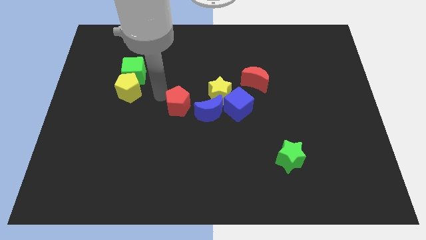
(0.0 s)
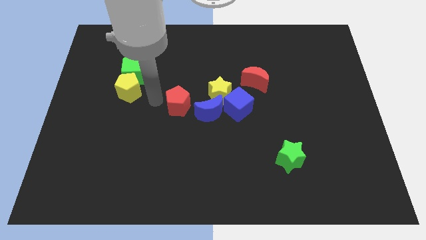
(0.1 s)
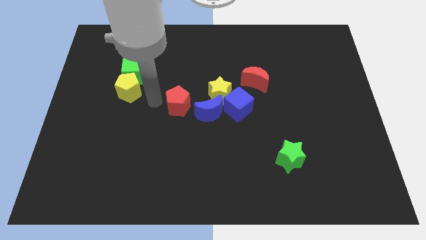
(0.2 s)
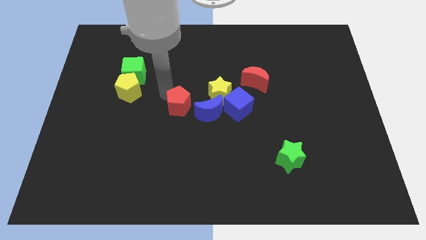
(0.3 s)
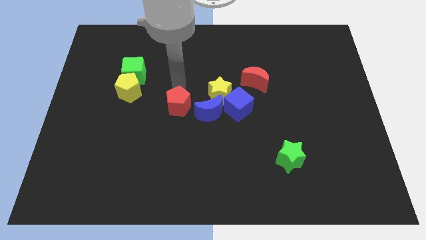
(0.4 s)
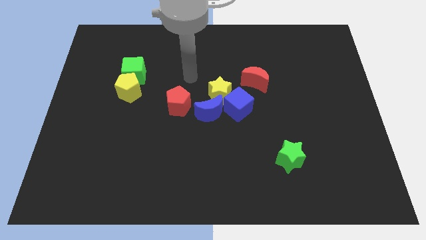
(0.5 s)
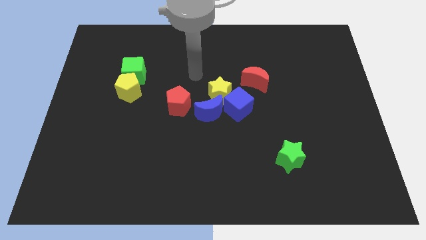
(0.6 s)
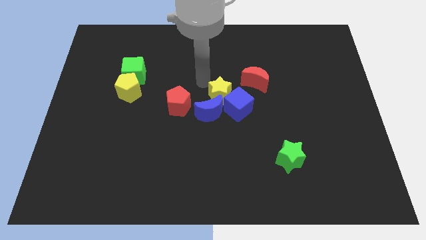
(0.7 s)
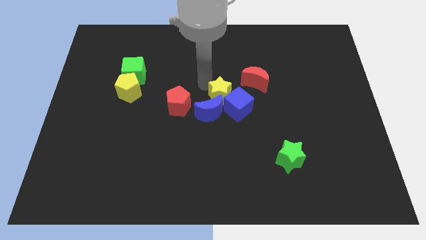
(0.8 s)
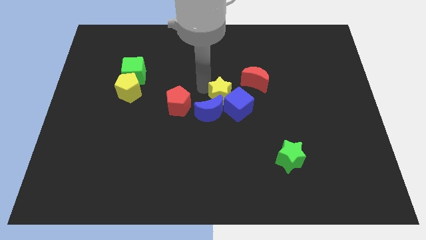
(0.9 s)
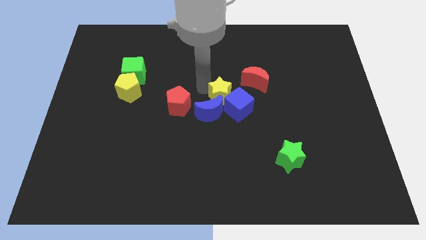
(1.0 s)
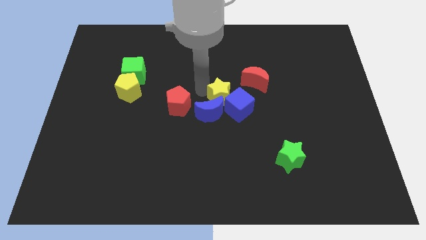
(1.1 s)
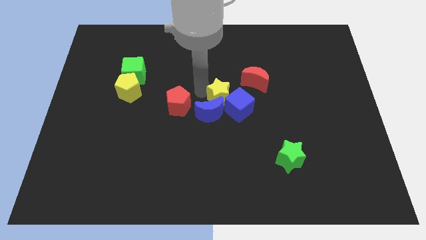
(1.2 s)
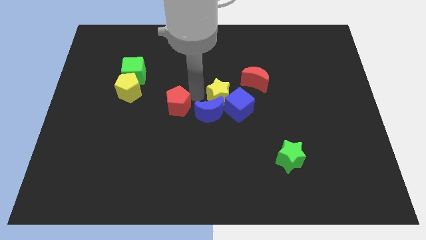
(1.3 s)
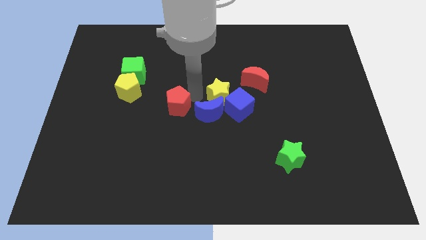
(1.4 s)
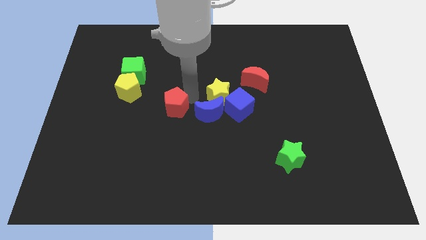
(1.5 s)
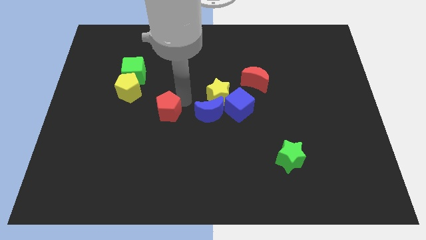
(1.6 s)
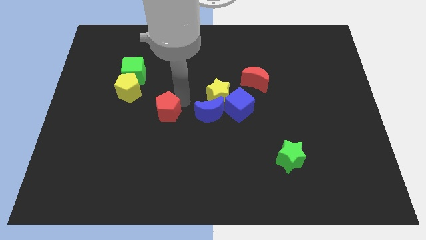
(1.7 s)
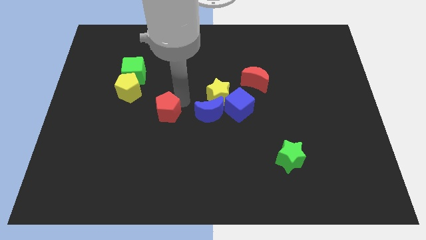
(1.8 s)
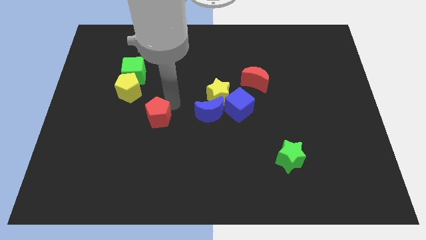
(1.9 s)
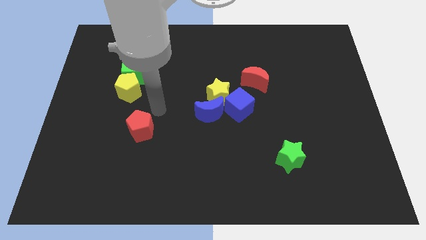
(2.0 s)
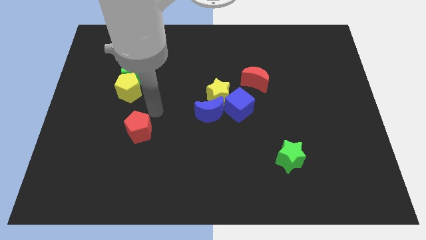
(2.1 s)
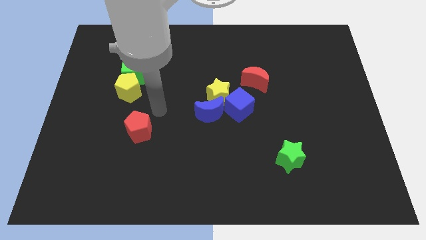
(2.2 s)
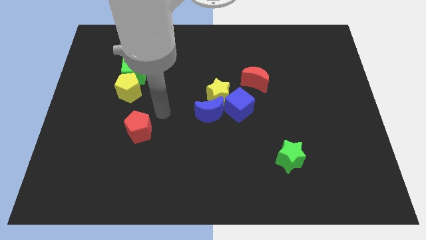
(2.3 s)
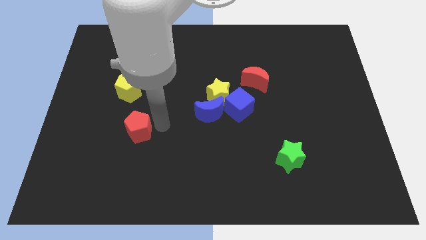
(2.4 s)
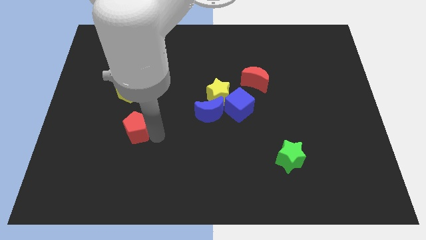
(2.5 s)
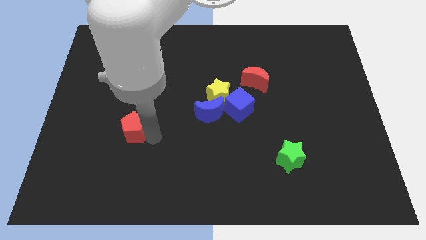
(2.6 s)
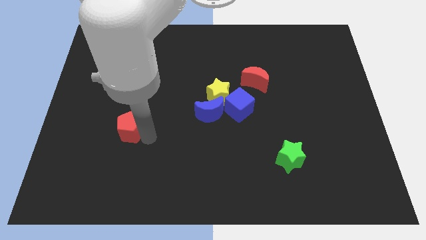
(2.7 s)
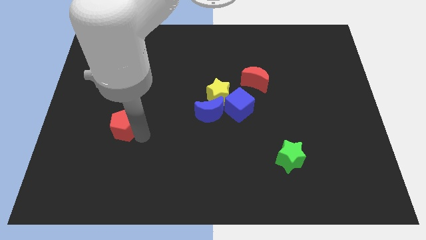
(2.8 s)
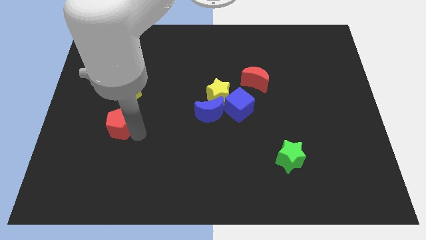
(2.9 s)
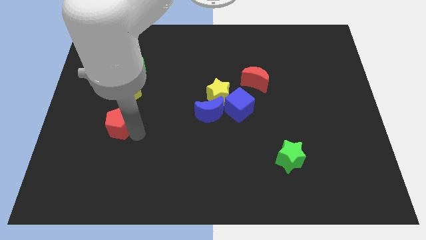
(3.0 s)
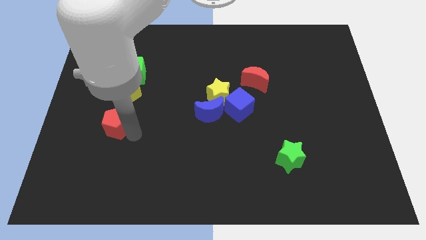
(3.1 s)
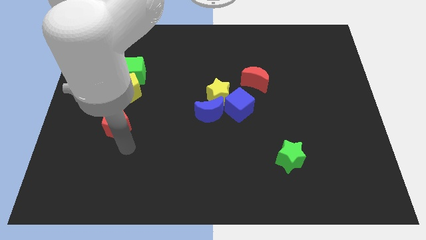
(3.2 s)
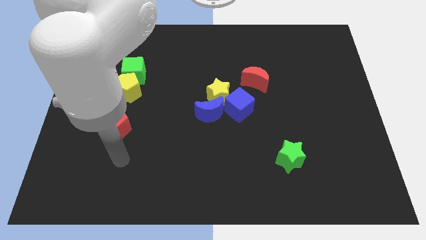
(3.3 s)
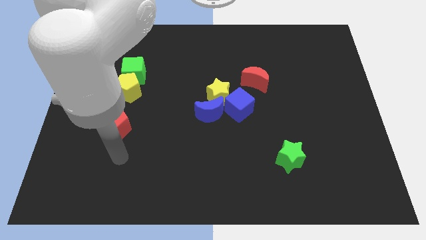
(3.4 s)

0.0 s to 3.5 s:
place the red pentagon underneath the yellow pentagon

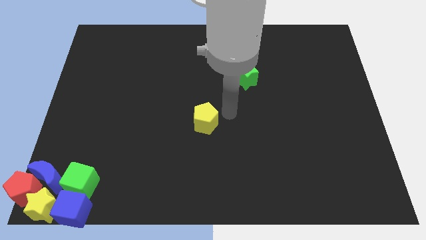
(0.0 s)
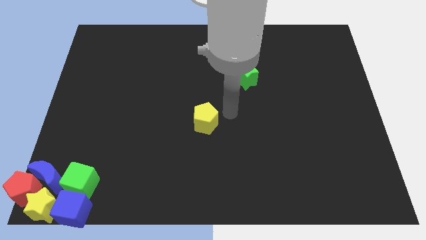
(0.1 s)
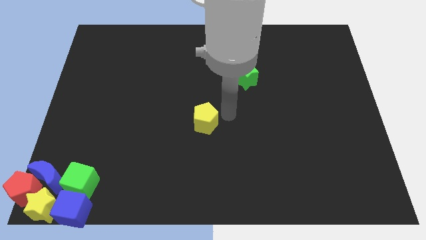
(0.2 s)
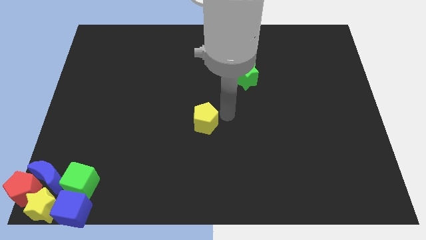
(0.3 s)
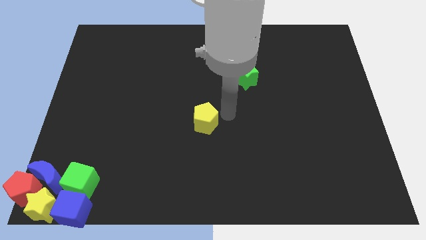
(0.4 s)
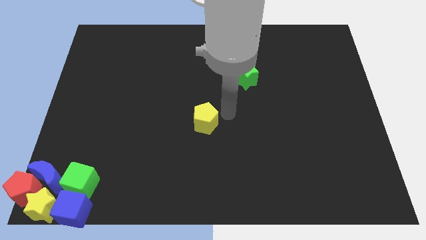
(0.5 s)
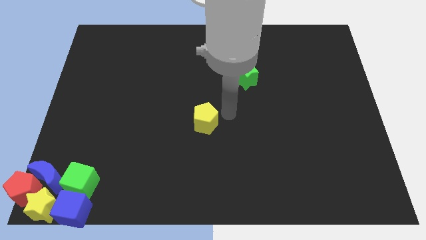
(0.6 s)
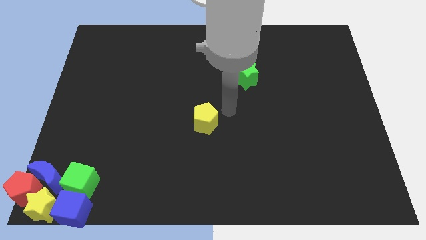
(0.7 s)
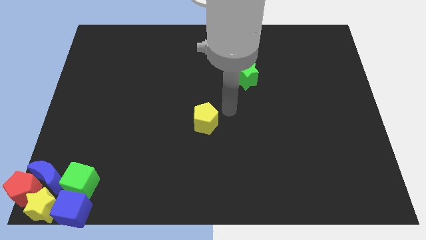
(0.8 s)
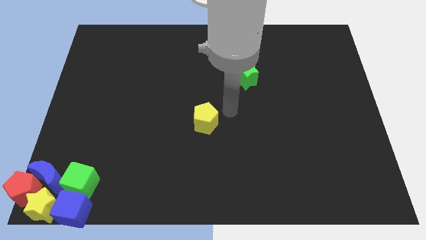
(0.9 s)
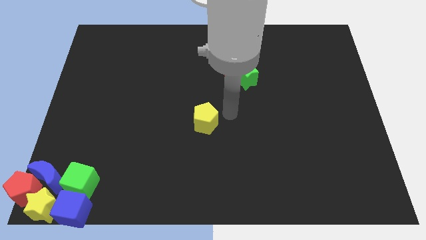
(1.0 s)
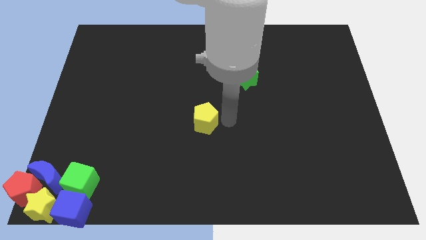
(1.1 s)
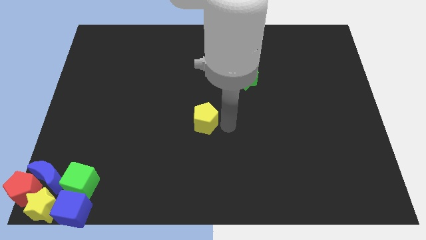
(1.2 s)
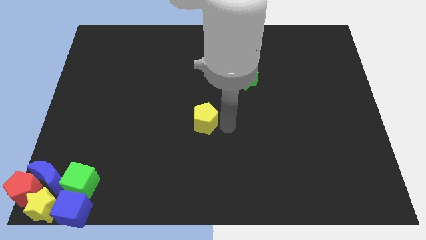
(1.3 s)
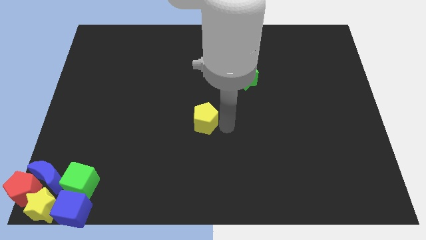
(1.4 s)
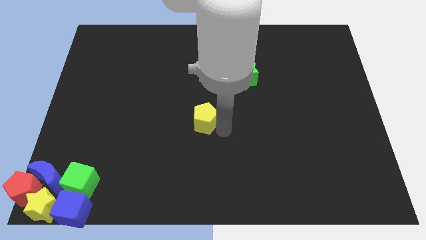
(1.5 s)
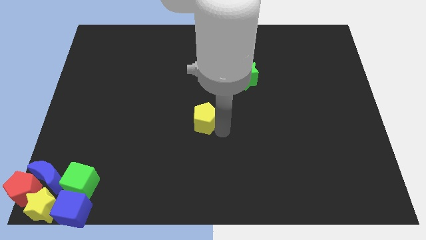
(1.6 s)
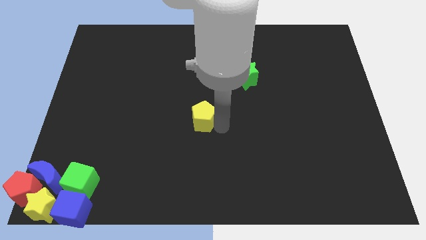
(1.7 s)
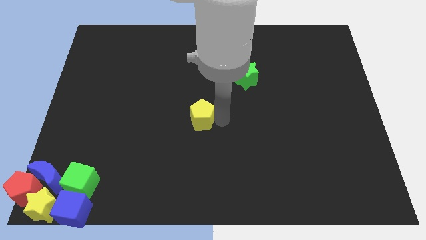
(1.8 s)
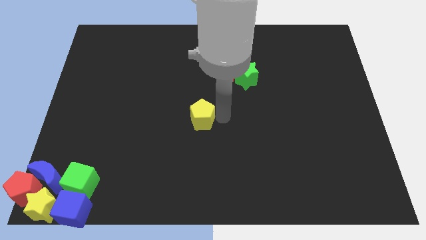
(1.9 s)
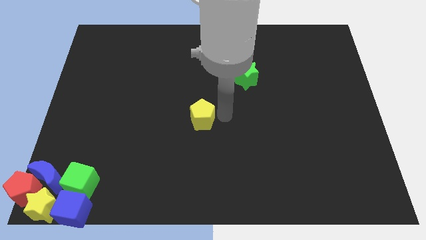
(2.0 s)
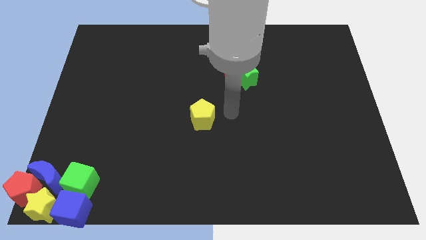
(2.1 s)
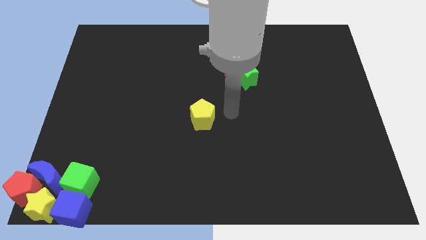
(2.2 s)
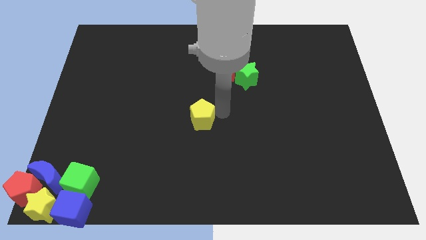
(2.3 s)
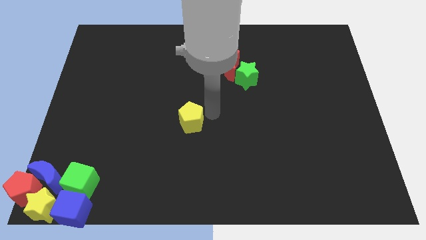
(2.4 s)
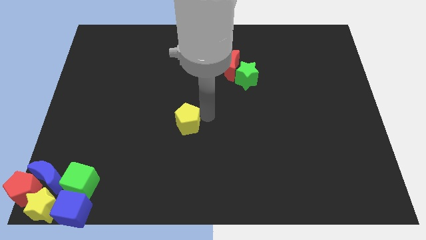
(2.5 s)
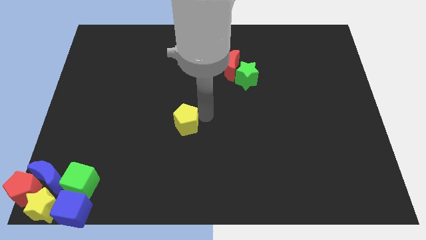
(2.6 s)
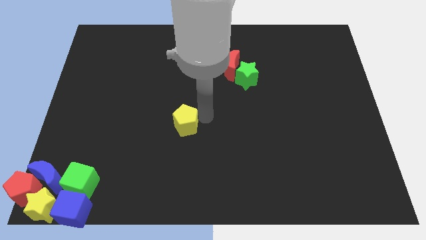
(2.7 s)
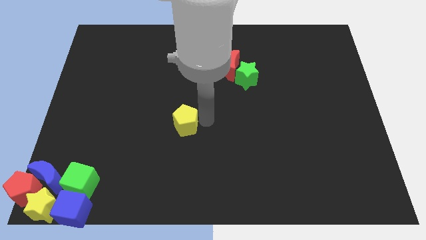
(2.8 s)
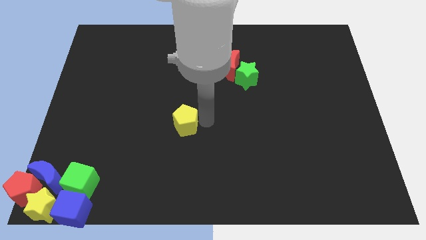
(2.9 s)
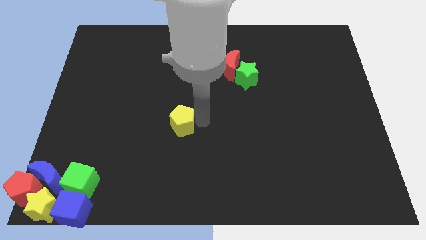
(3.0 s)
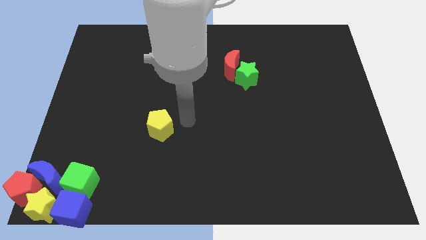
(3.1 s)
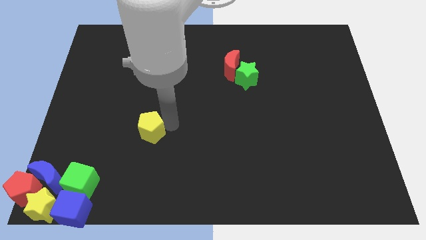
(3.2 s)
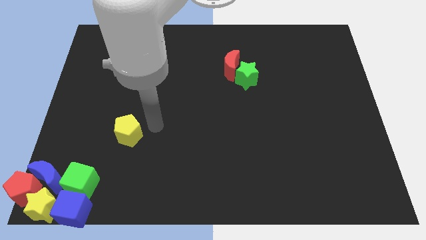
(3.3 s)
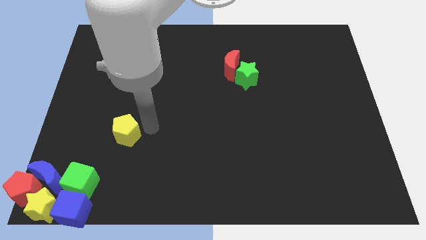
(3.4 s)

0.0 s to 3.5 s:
slide the yellow pentagon towards the group of blocks

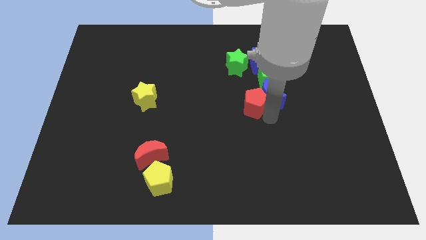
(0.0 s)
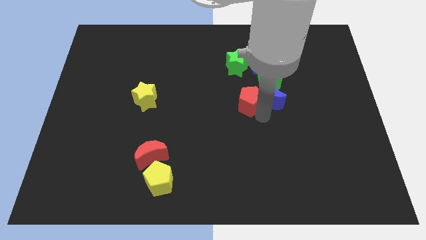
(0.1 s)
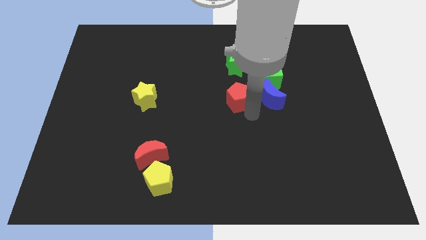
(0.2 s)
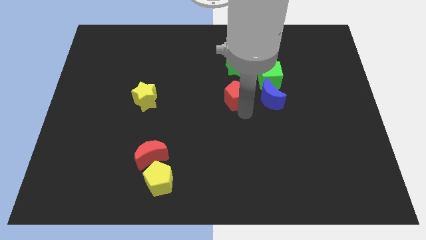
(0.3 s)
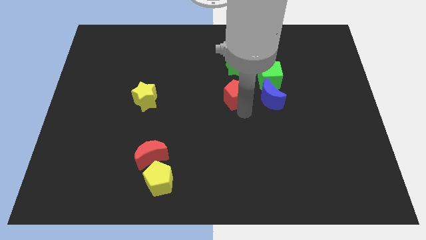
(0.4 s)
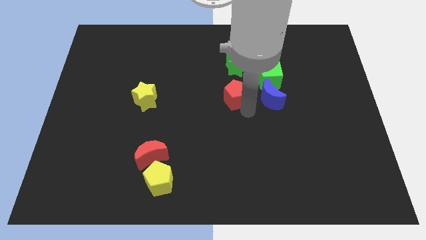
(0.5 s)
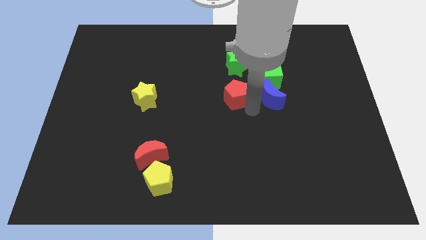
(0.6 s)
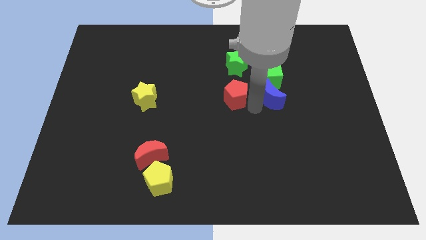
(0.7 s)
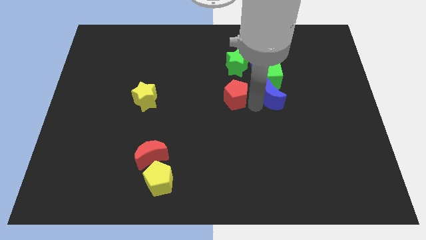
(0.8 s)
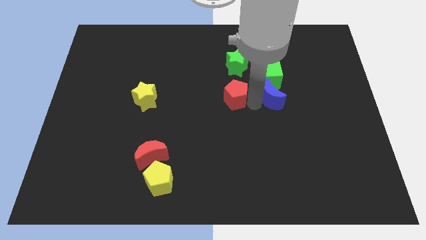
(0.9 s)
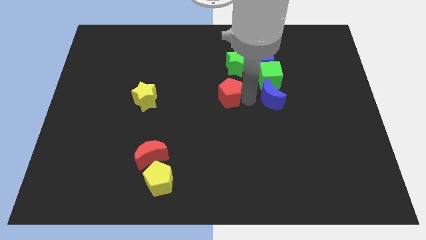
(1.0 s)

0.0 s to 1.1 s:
place the red pentagon below the green star

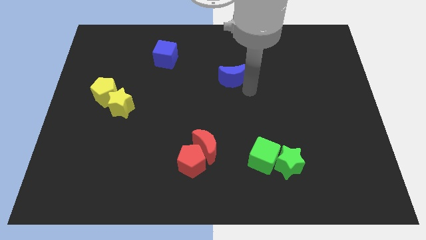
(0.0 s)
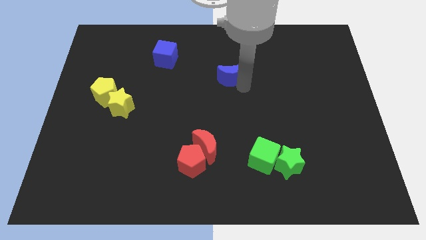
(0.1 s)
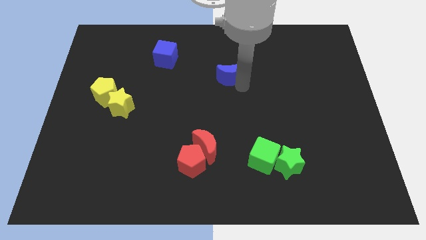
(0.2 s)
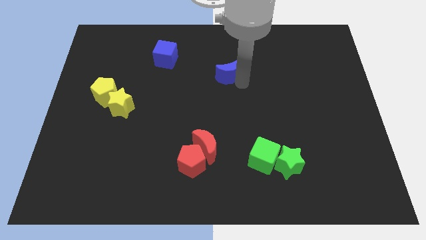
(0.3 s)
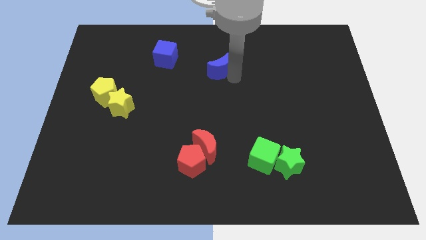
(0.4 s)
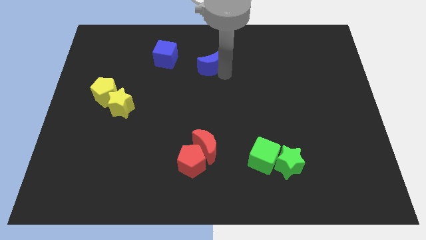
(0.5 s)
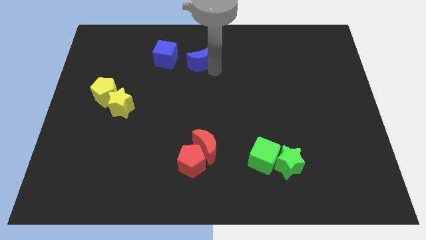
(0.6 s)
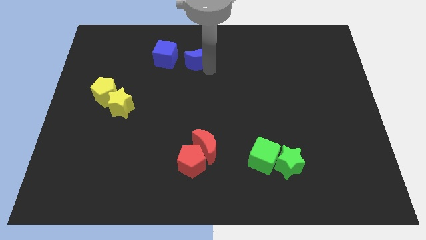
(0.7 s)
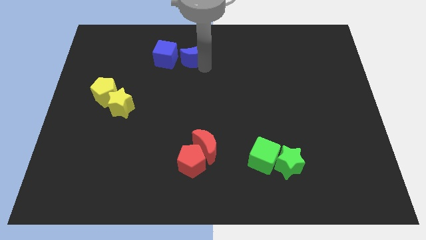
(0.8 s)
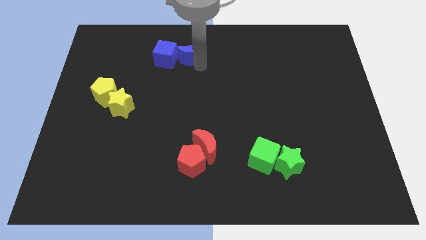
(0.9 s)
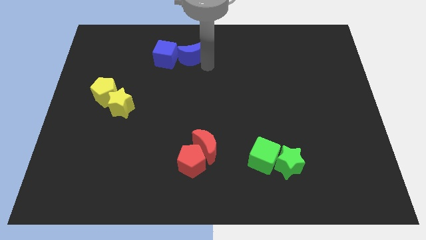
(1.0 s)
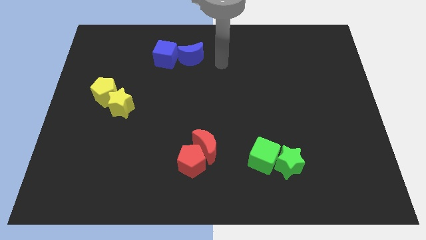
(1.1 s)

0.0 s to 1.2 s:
place the blue moon next to the blue cube
